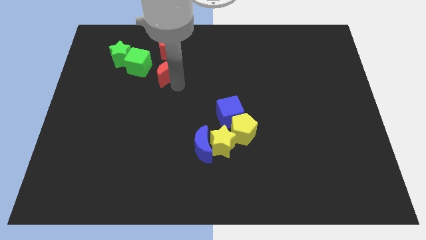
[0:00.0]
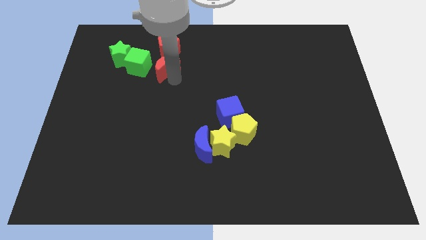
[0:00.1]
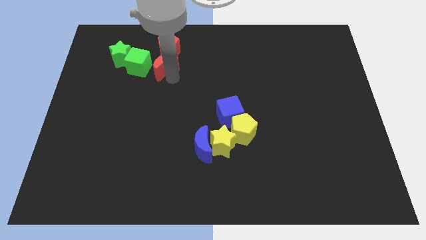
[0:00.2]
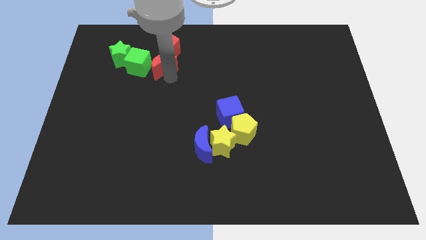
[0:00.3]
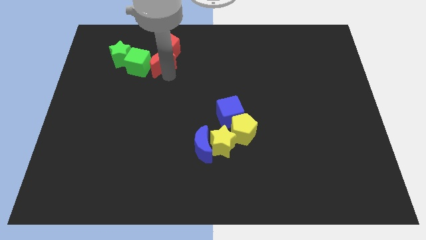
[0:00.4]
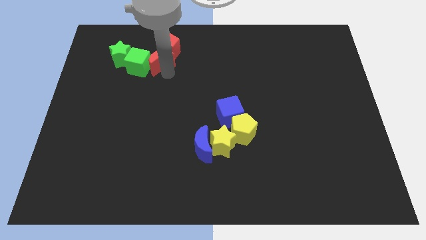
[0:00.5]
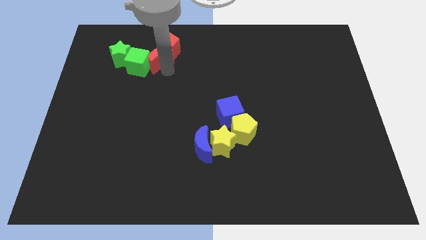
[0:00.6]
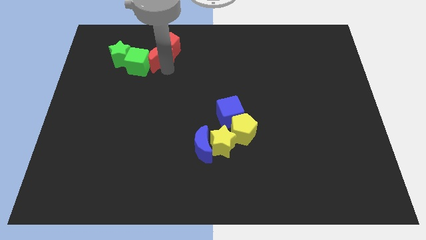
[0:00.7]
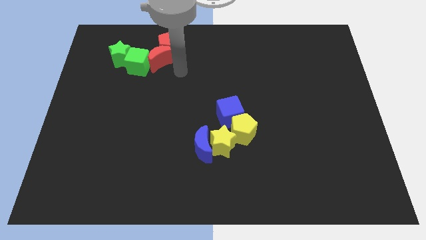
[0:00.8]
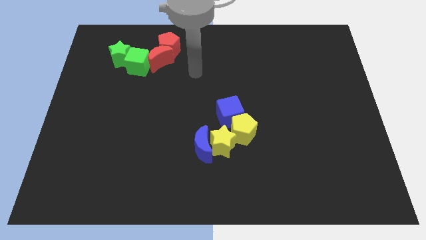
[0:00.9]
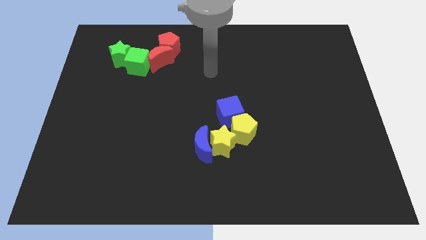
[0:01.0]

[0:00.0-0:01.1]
place the red moon between the red pentagon and green cube

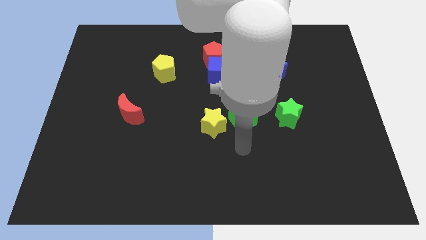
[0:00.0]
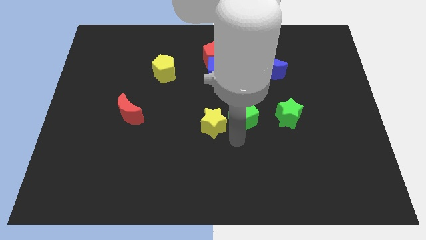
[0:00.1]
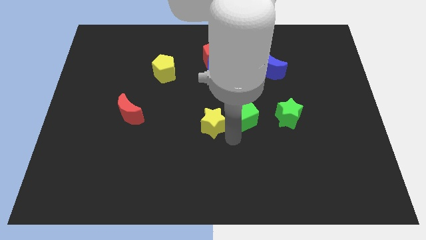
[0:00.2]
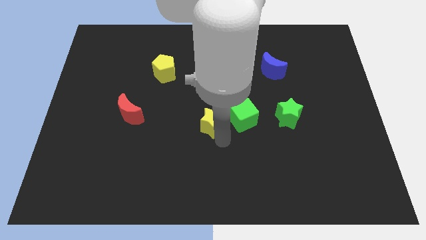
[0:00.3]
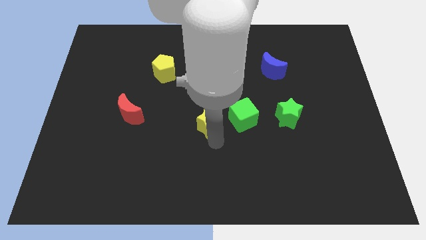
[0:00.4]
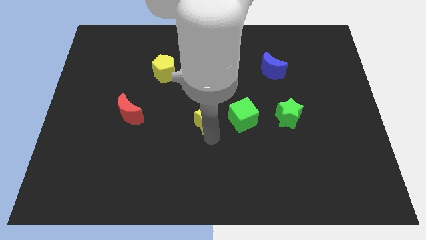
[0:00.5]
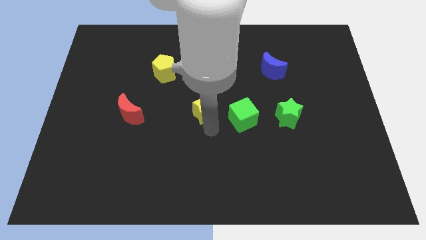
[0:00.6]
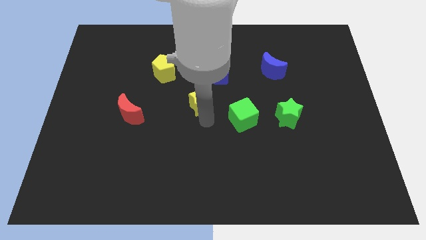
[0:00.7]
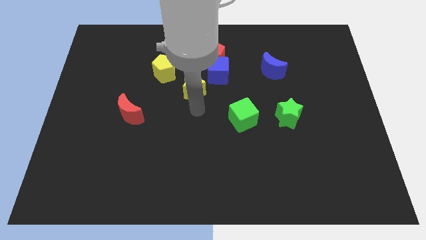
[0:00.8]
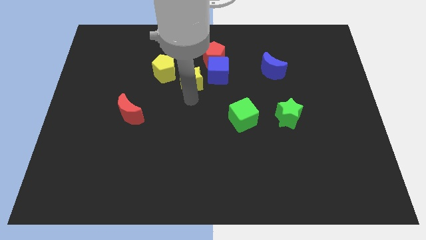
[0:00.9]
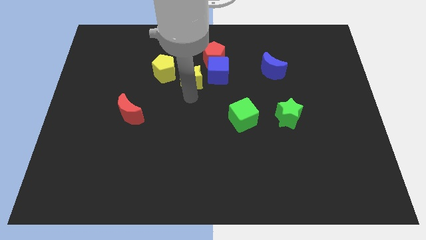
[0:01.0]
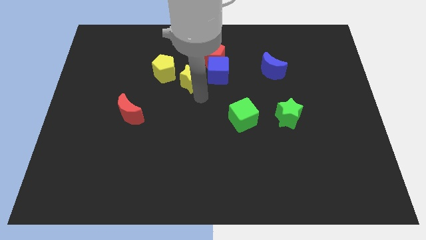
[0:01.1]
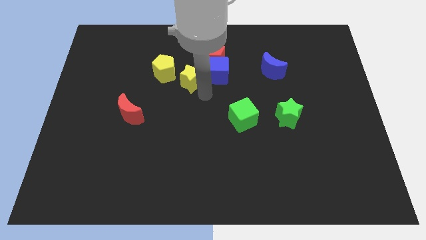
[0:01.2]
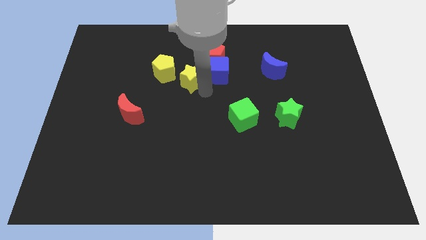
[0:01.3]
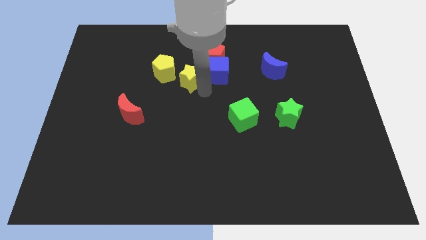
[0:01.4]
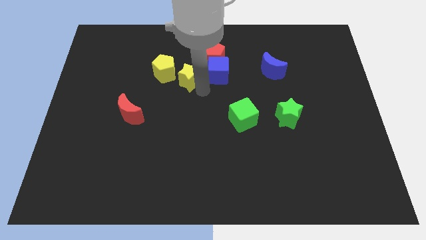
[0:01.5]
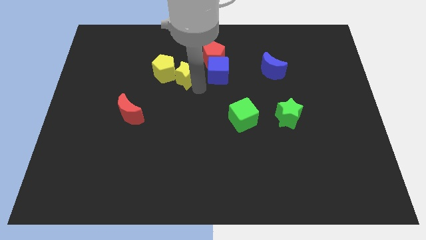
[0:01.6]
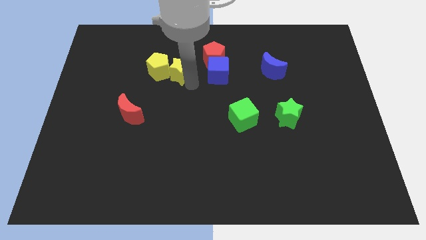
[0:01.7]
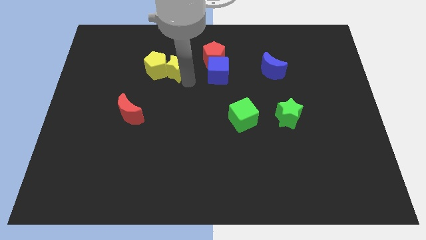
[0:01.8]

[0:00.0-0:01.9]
slide the yellow star into the yellow pentagon

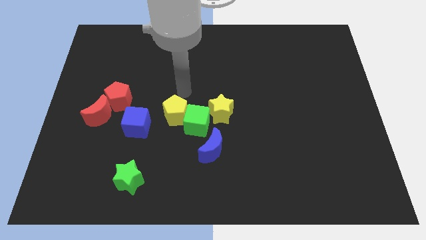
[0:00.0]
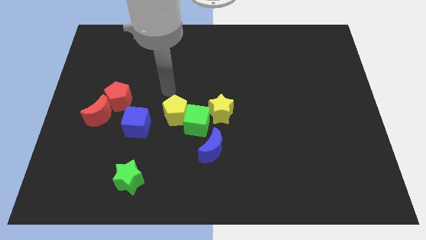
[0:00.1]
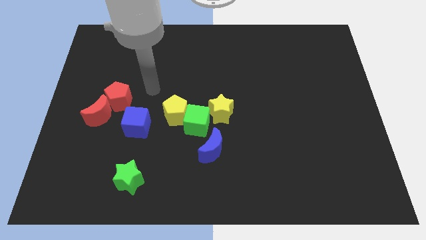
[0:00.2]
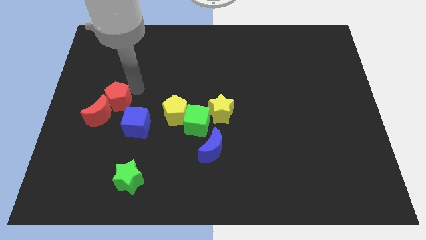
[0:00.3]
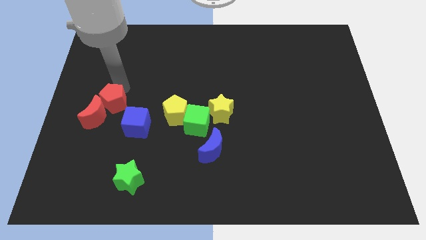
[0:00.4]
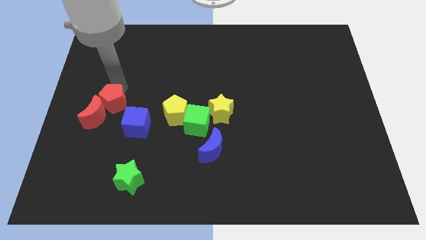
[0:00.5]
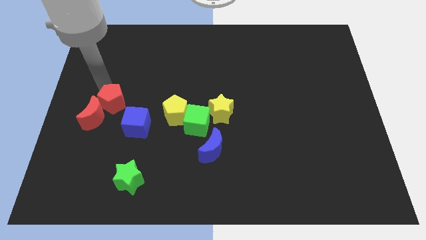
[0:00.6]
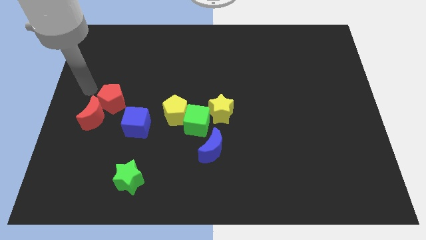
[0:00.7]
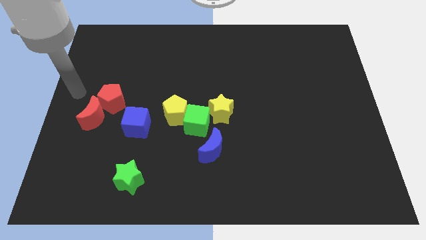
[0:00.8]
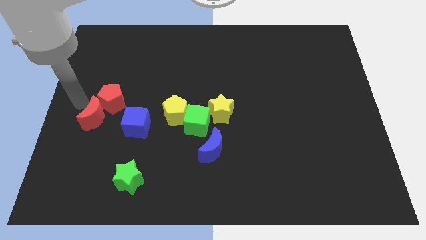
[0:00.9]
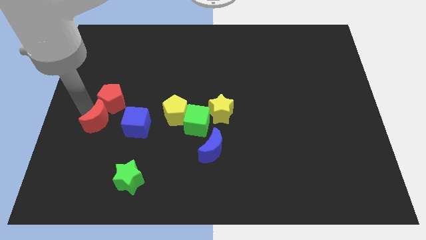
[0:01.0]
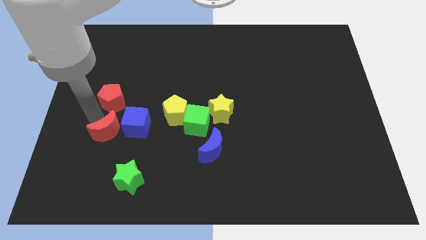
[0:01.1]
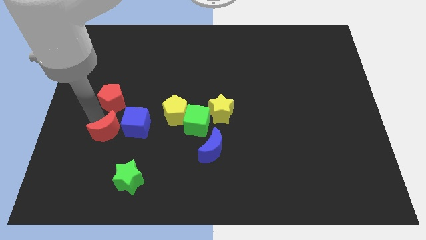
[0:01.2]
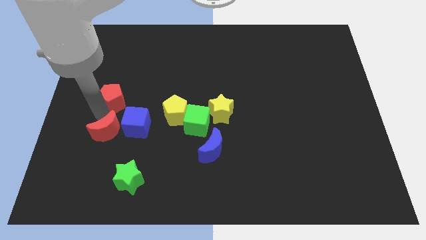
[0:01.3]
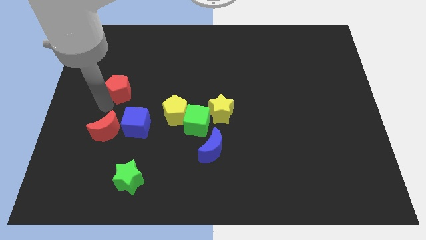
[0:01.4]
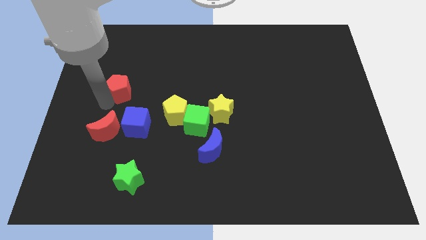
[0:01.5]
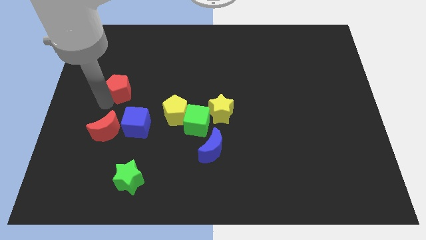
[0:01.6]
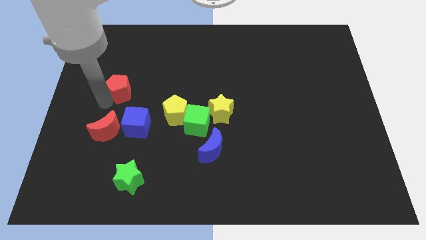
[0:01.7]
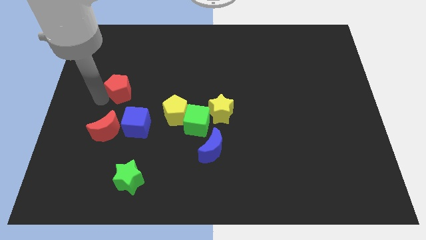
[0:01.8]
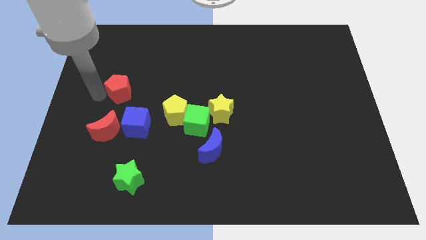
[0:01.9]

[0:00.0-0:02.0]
separate red moon from the red pentagon

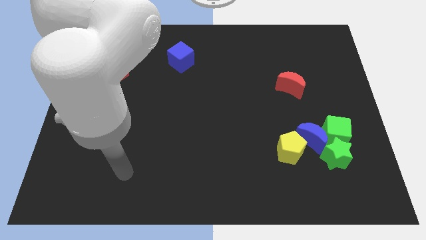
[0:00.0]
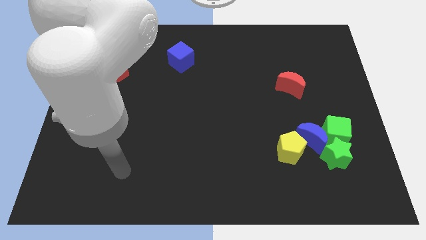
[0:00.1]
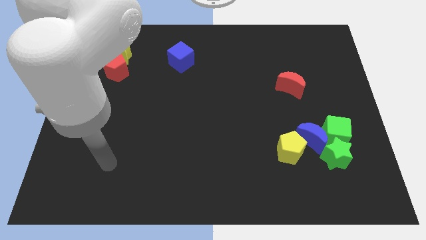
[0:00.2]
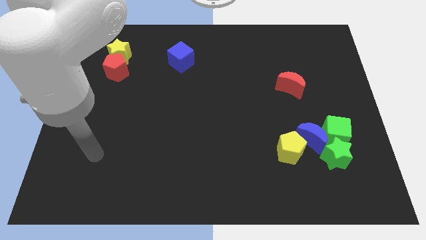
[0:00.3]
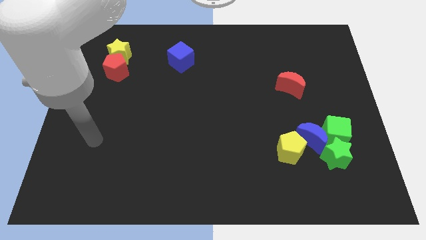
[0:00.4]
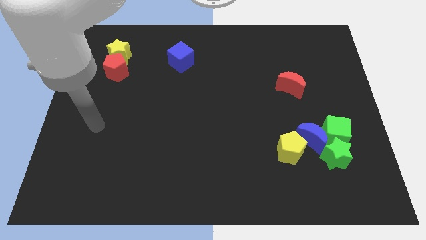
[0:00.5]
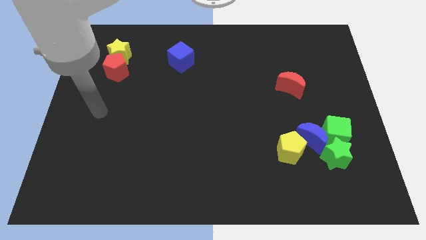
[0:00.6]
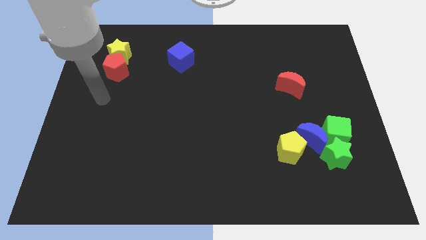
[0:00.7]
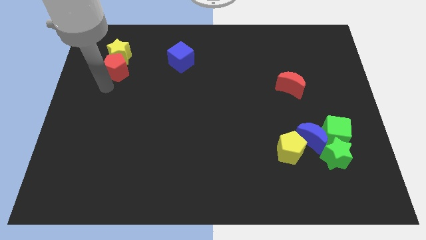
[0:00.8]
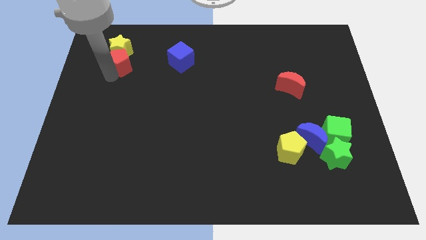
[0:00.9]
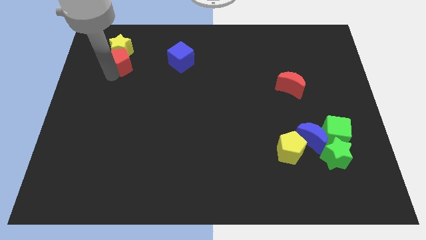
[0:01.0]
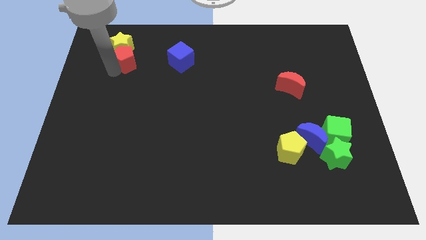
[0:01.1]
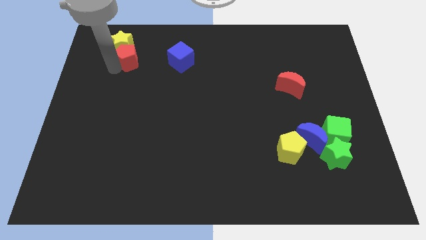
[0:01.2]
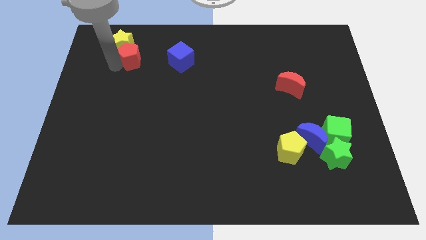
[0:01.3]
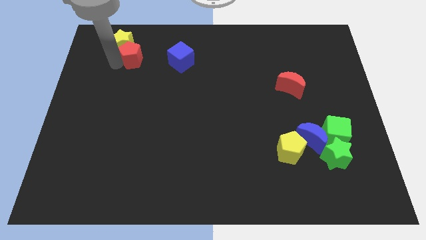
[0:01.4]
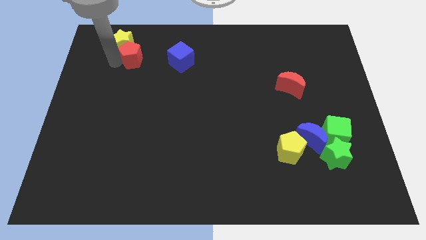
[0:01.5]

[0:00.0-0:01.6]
move the red penatgon and yellow star towards the top

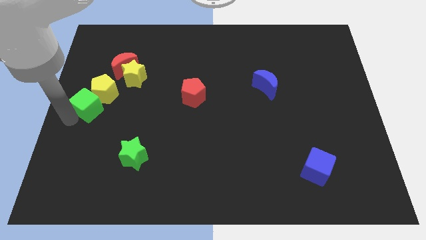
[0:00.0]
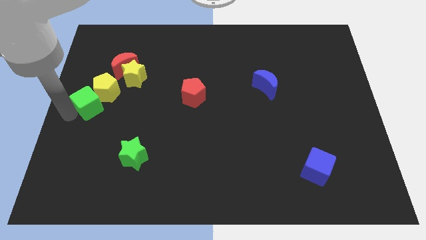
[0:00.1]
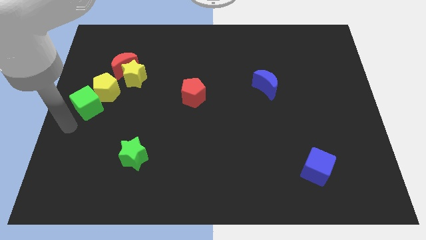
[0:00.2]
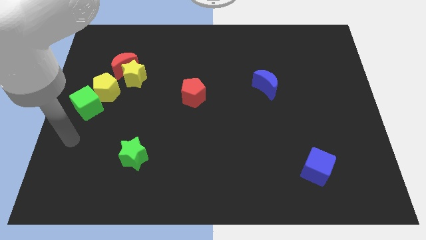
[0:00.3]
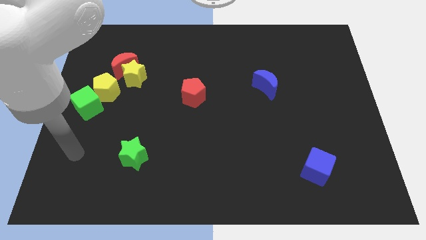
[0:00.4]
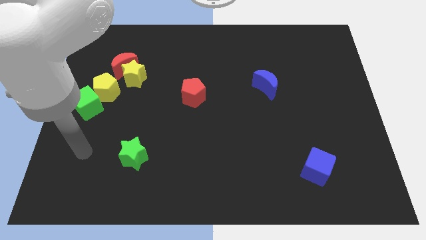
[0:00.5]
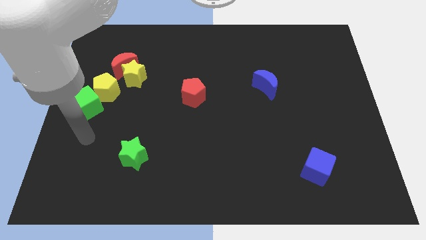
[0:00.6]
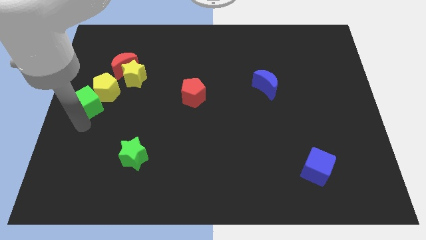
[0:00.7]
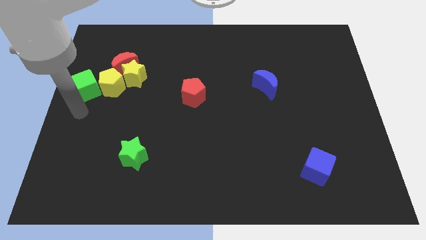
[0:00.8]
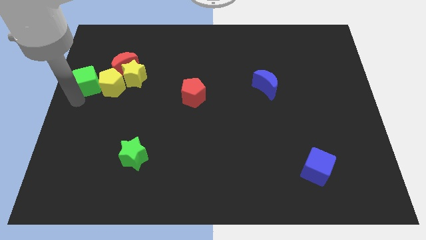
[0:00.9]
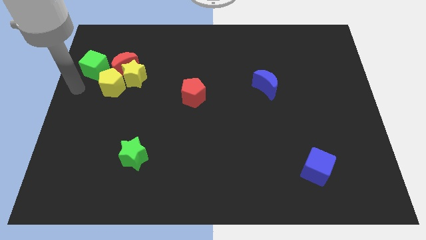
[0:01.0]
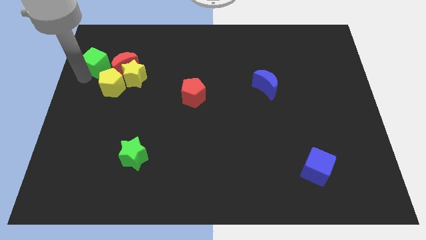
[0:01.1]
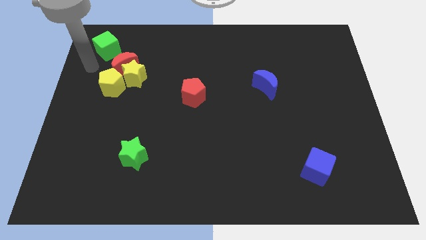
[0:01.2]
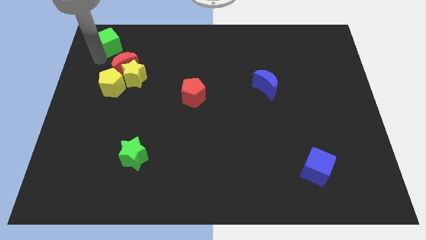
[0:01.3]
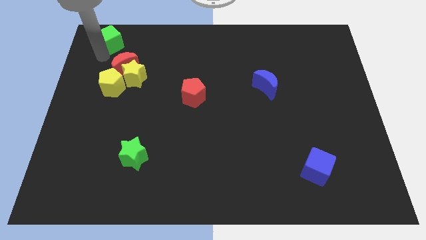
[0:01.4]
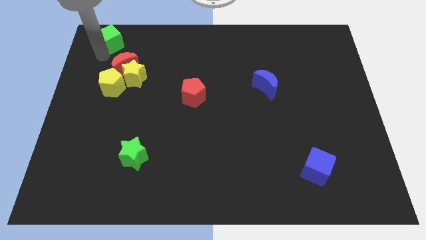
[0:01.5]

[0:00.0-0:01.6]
place the green cube above the red moon

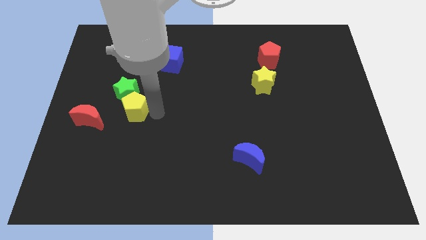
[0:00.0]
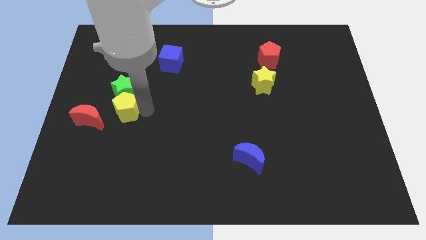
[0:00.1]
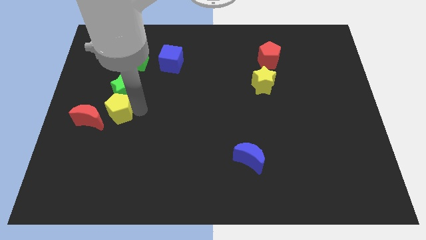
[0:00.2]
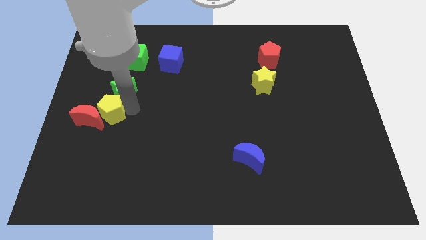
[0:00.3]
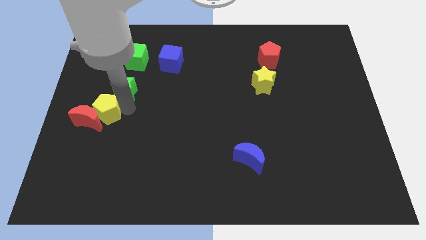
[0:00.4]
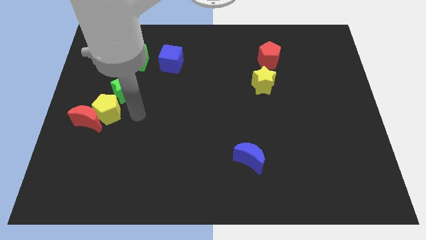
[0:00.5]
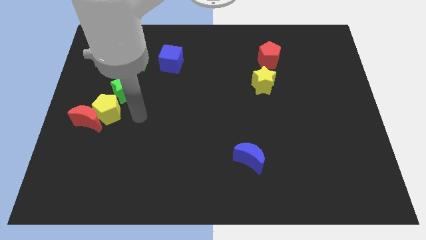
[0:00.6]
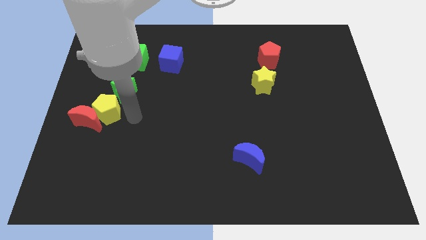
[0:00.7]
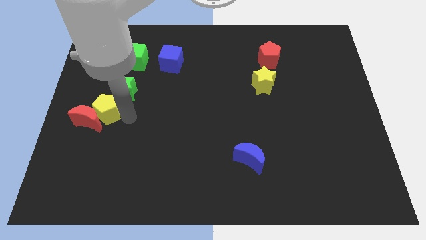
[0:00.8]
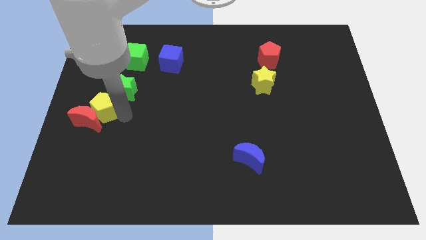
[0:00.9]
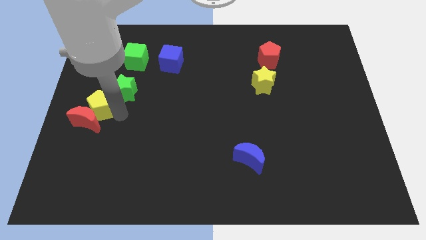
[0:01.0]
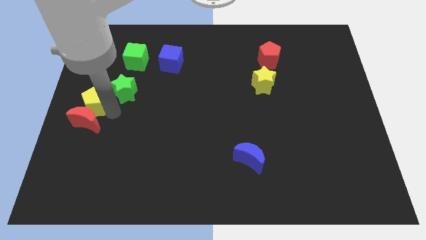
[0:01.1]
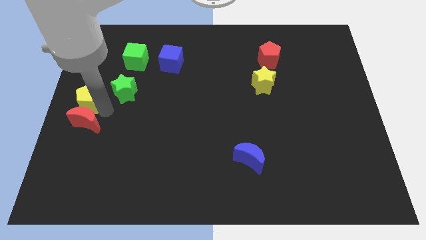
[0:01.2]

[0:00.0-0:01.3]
place the yellow pentagon above the red crescent
